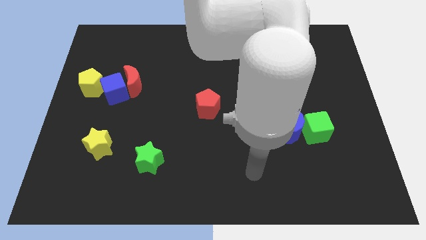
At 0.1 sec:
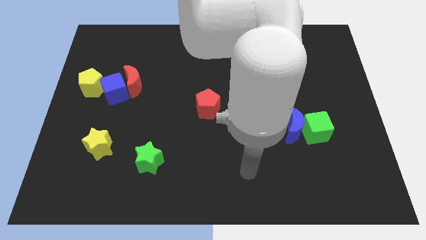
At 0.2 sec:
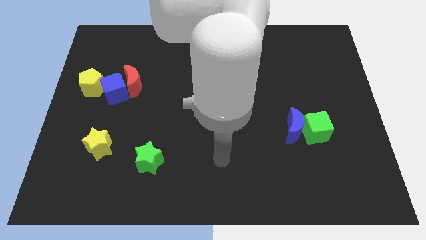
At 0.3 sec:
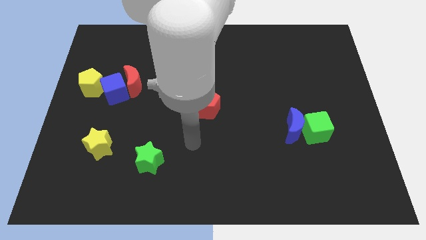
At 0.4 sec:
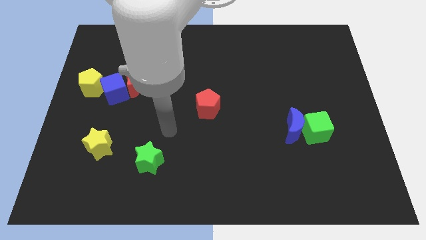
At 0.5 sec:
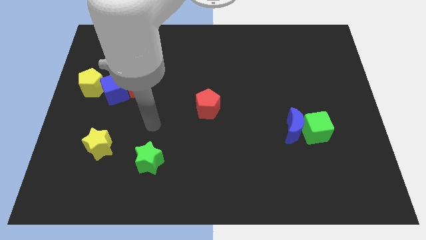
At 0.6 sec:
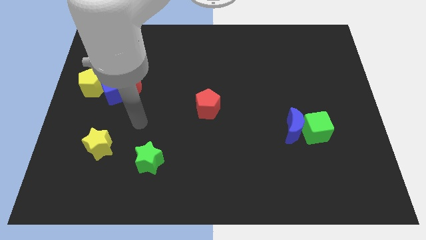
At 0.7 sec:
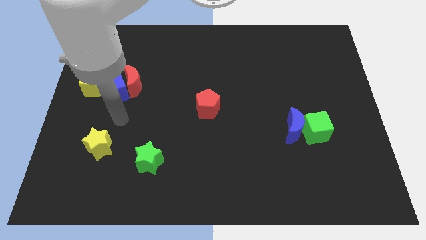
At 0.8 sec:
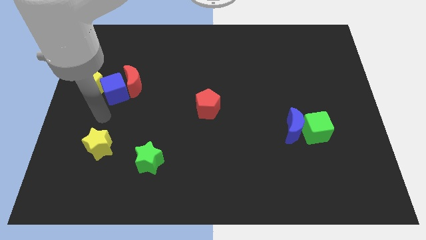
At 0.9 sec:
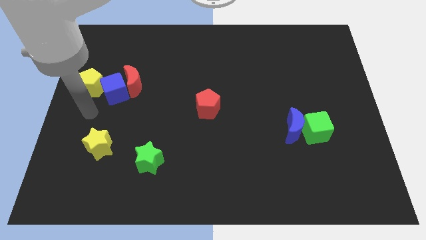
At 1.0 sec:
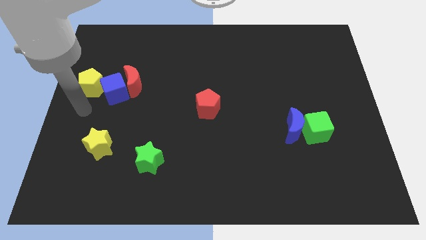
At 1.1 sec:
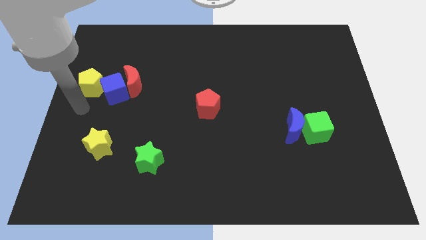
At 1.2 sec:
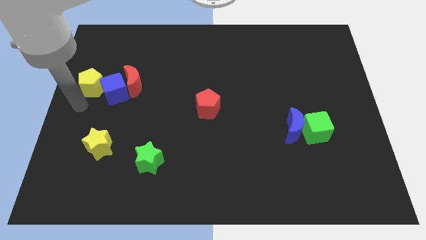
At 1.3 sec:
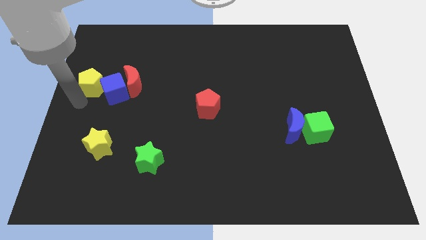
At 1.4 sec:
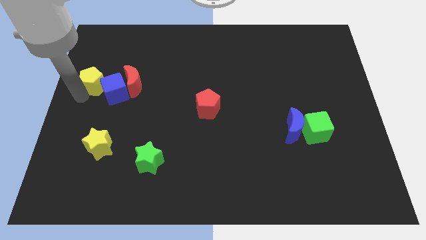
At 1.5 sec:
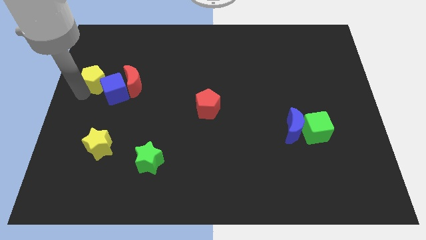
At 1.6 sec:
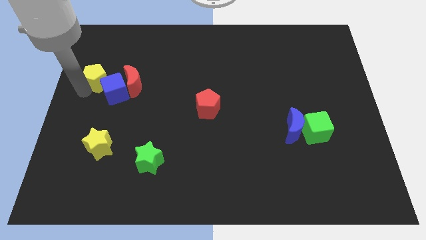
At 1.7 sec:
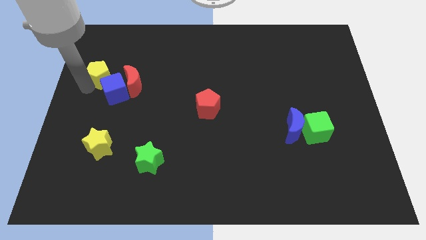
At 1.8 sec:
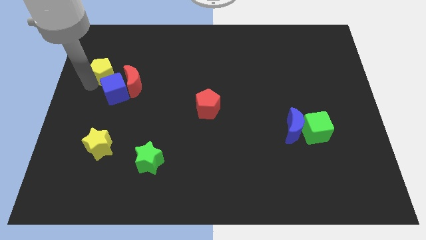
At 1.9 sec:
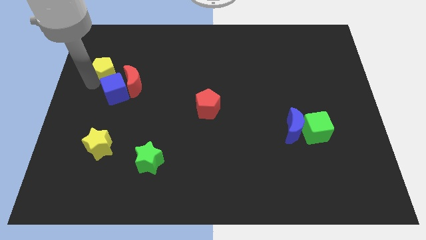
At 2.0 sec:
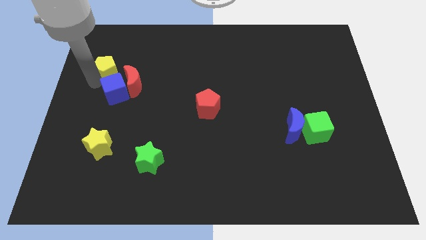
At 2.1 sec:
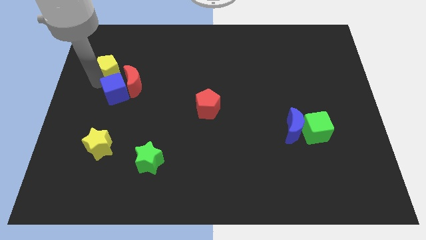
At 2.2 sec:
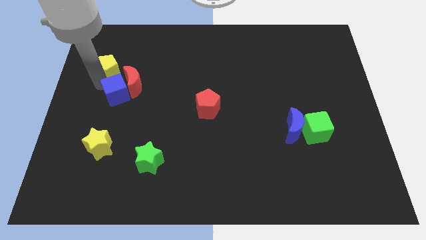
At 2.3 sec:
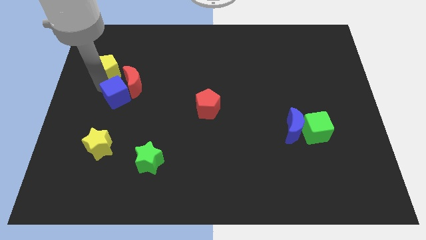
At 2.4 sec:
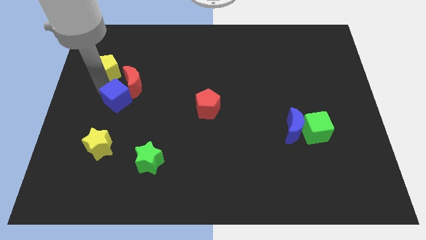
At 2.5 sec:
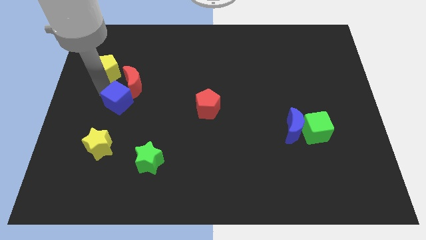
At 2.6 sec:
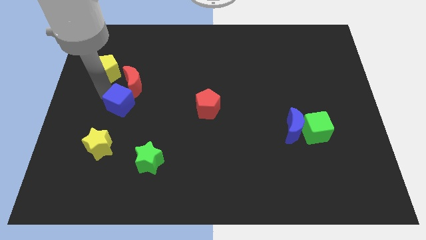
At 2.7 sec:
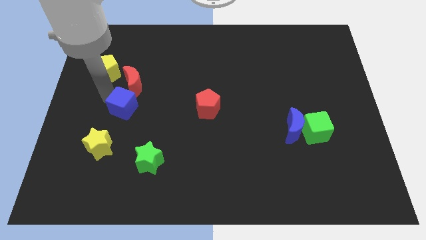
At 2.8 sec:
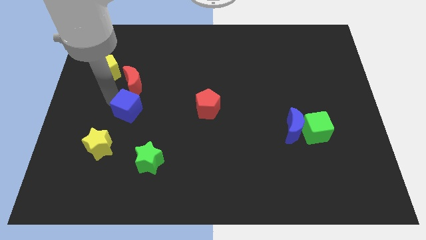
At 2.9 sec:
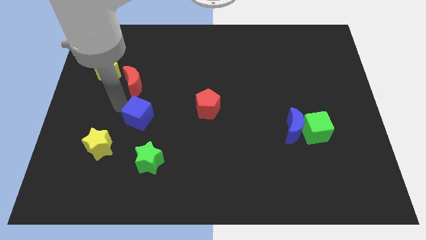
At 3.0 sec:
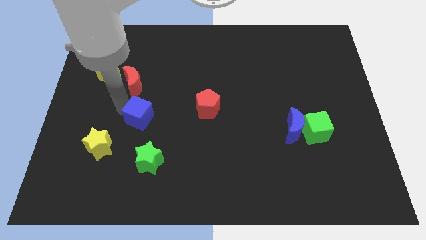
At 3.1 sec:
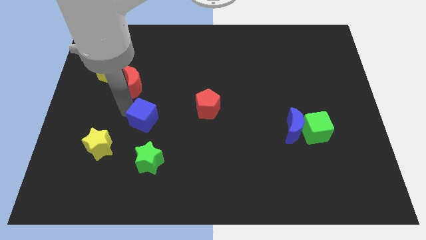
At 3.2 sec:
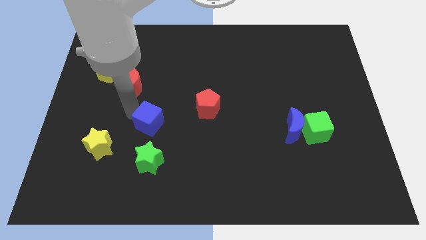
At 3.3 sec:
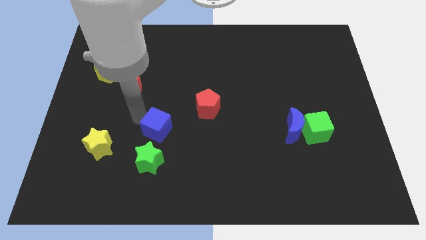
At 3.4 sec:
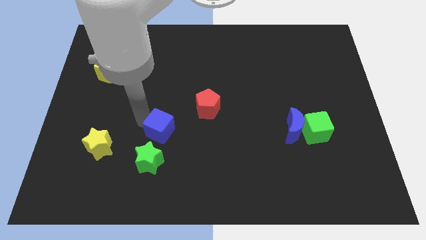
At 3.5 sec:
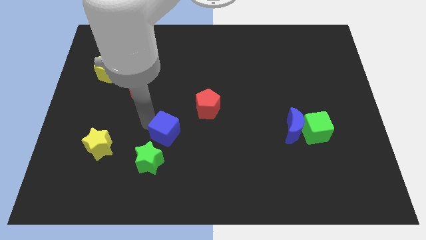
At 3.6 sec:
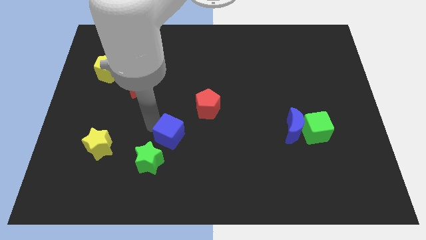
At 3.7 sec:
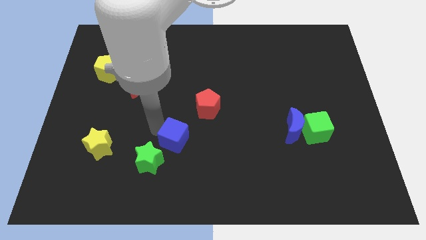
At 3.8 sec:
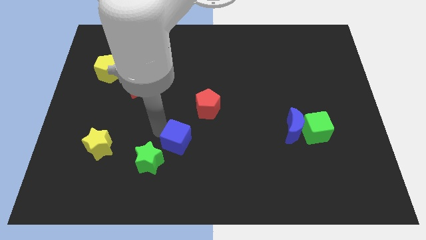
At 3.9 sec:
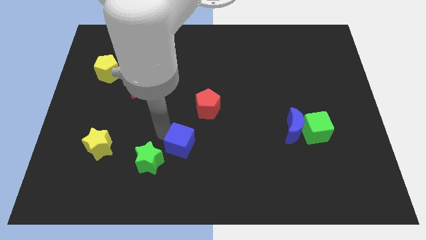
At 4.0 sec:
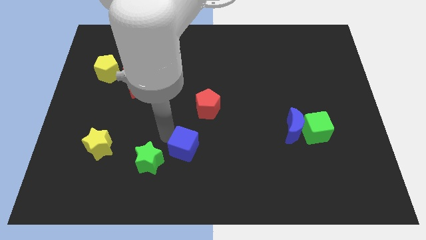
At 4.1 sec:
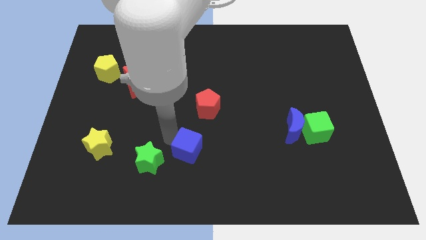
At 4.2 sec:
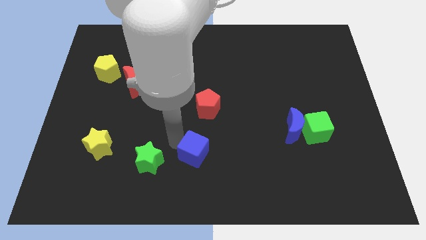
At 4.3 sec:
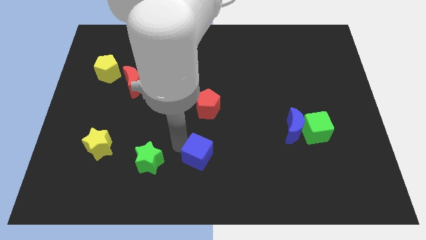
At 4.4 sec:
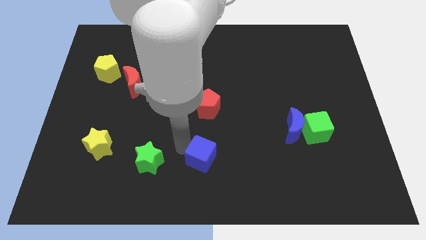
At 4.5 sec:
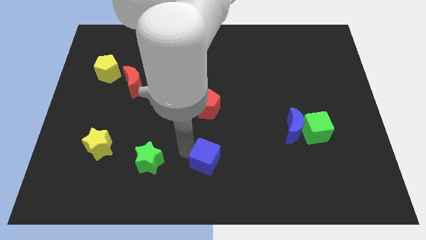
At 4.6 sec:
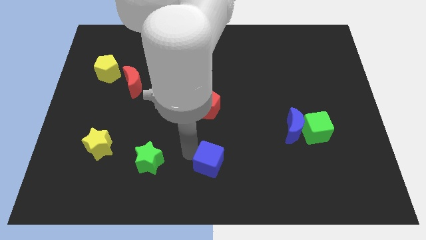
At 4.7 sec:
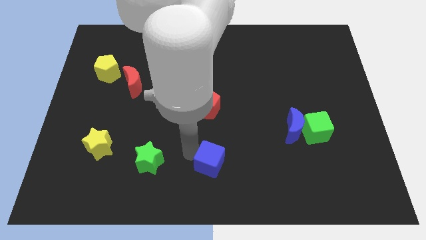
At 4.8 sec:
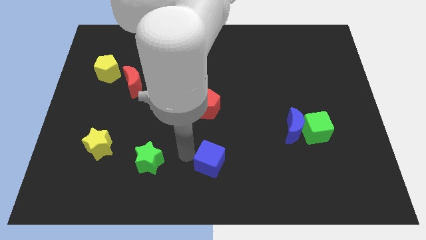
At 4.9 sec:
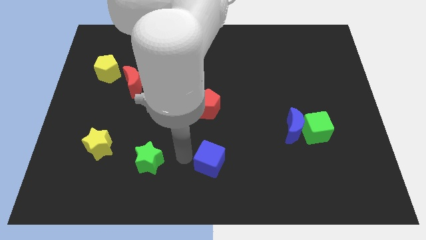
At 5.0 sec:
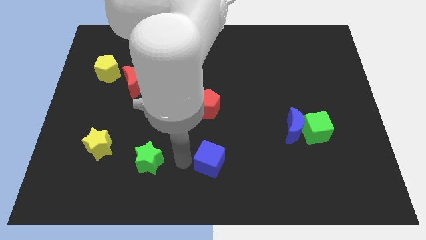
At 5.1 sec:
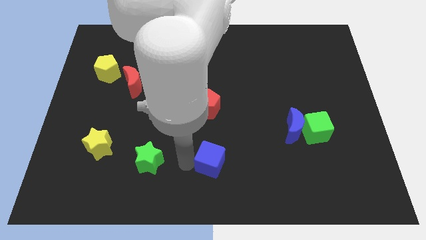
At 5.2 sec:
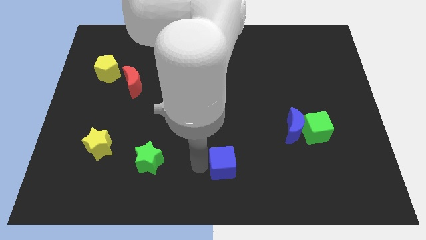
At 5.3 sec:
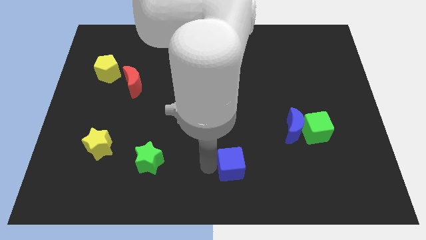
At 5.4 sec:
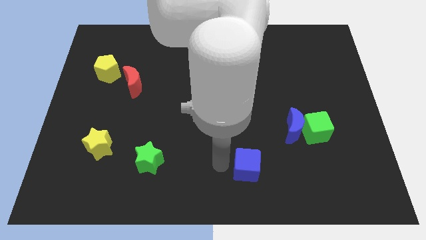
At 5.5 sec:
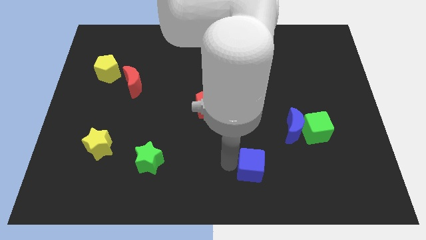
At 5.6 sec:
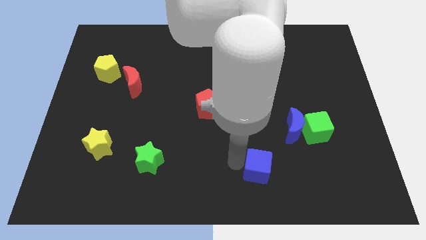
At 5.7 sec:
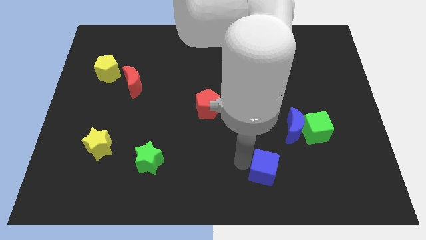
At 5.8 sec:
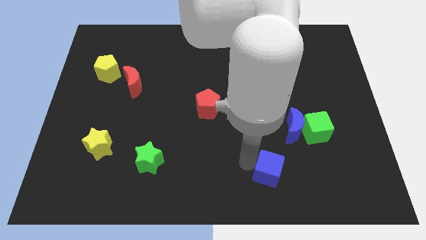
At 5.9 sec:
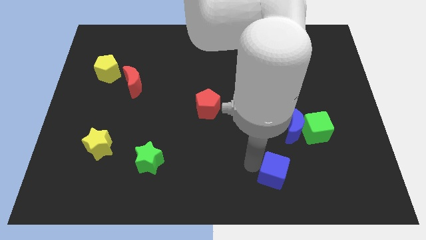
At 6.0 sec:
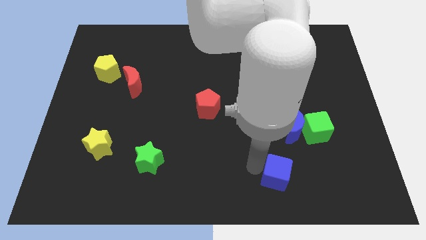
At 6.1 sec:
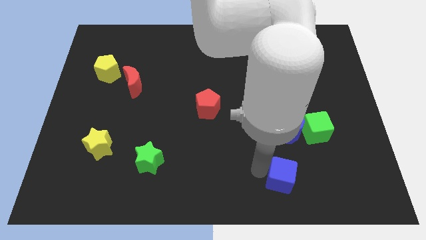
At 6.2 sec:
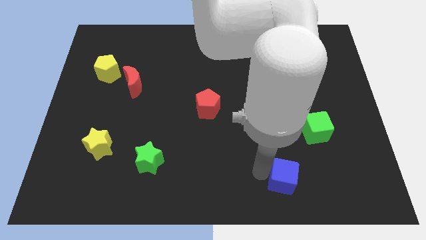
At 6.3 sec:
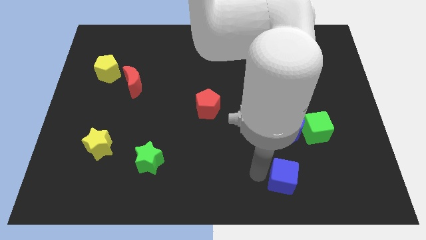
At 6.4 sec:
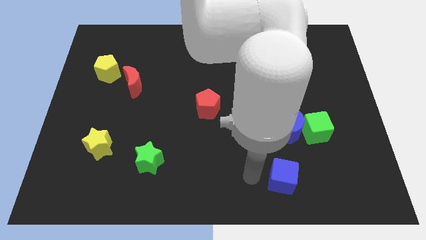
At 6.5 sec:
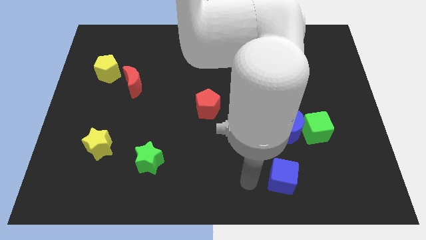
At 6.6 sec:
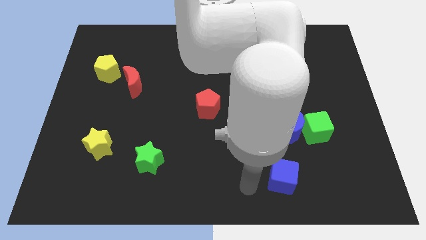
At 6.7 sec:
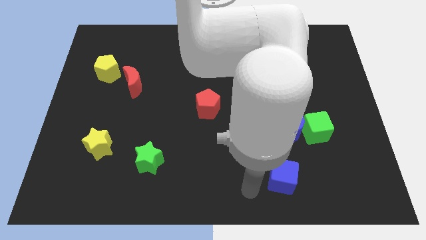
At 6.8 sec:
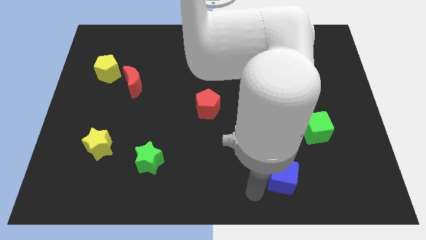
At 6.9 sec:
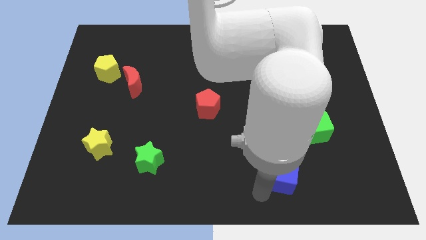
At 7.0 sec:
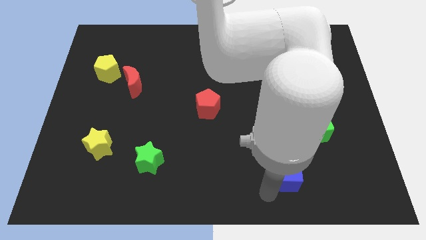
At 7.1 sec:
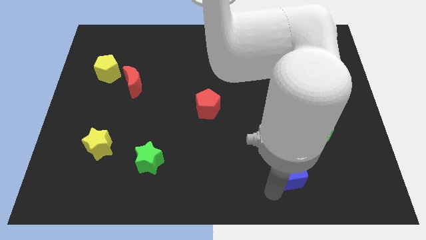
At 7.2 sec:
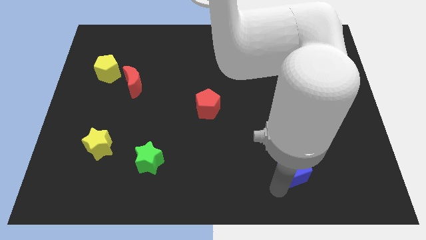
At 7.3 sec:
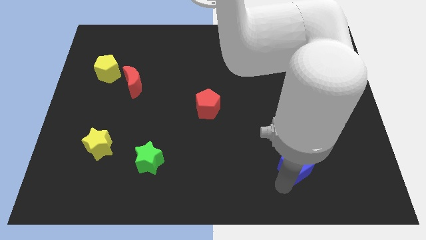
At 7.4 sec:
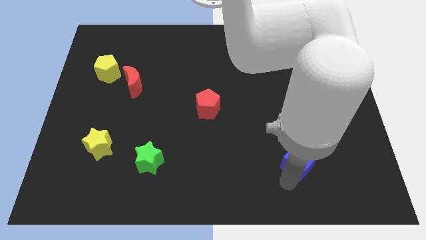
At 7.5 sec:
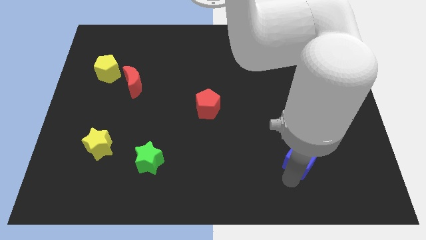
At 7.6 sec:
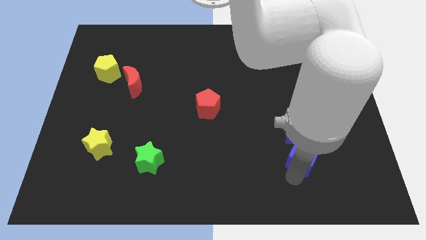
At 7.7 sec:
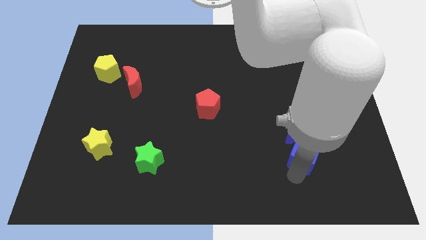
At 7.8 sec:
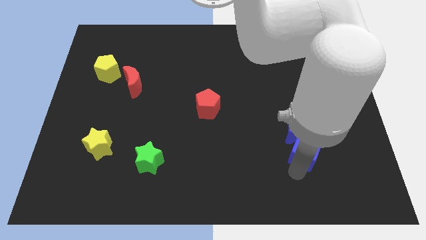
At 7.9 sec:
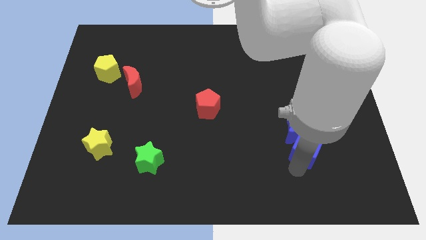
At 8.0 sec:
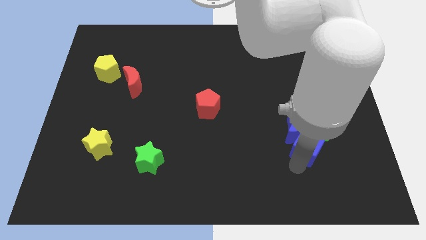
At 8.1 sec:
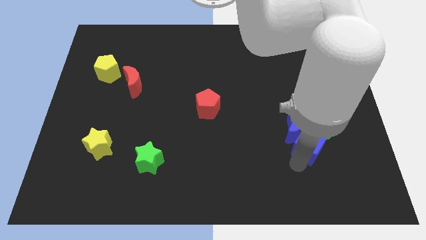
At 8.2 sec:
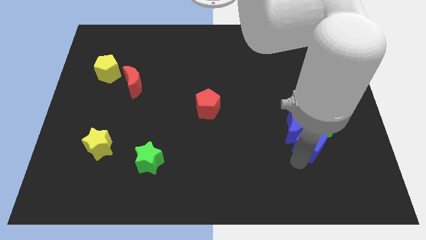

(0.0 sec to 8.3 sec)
put the blue cube next to the green cube
